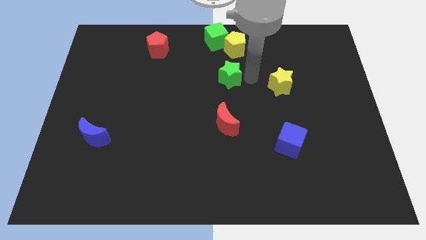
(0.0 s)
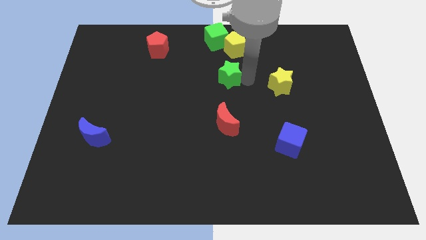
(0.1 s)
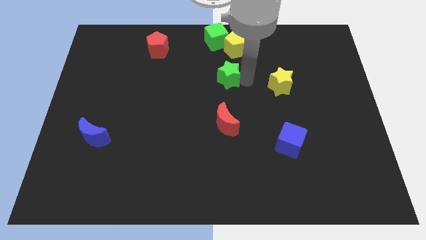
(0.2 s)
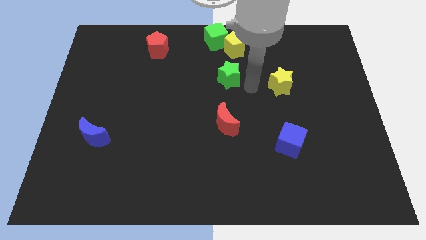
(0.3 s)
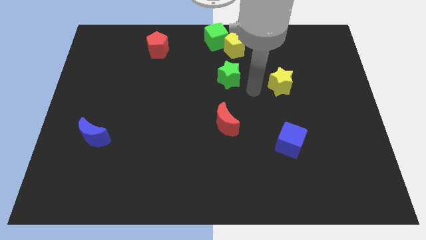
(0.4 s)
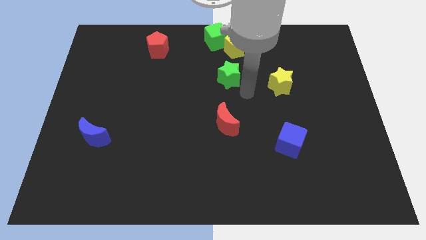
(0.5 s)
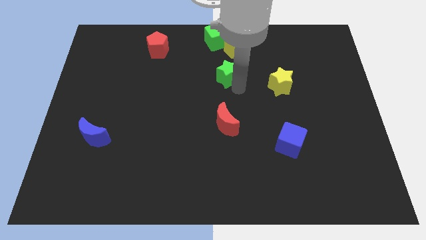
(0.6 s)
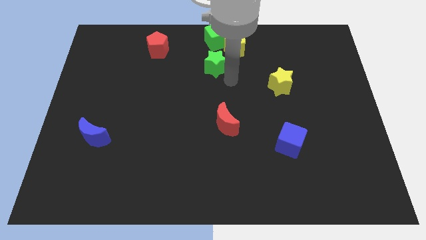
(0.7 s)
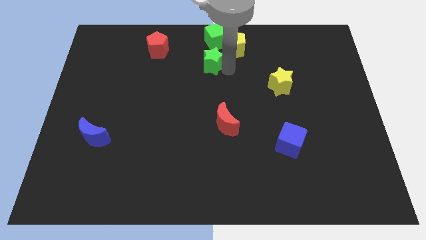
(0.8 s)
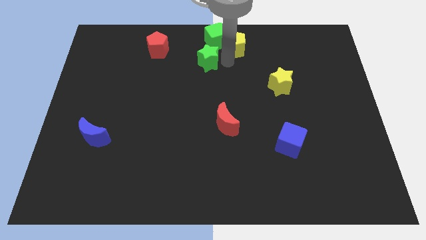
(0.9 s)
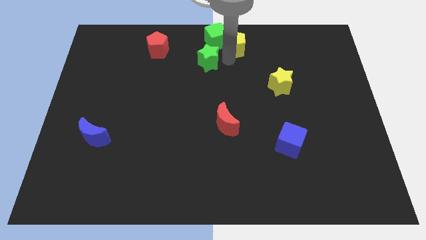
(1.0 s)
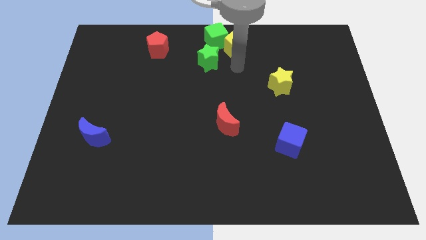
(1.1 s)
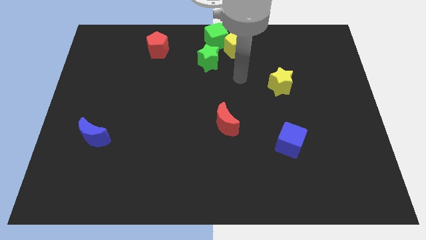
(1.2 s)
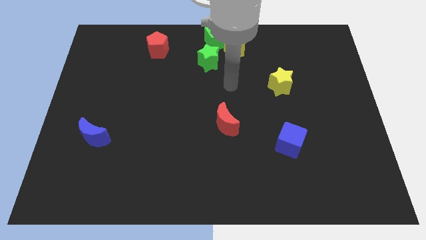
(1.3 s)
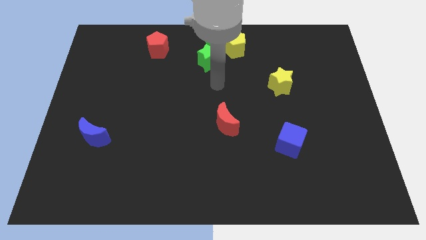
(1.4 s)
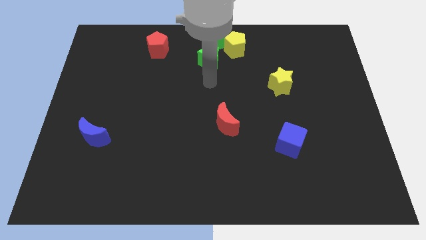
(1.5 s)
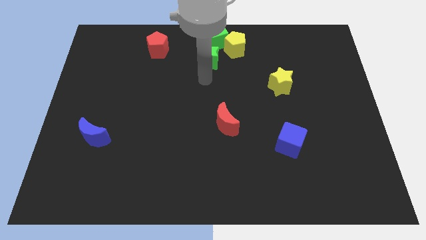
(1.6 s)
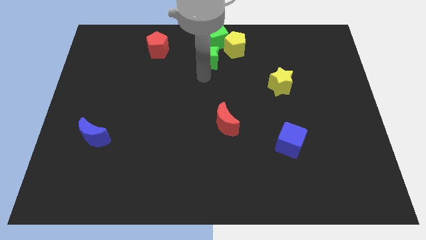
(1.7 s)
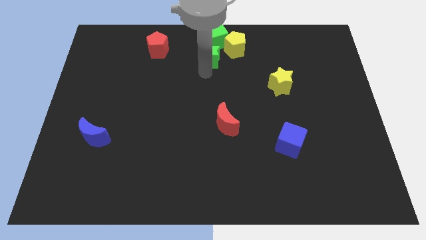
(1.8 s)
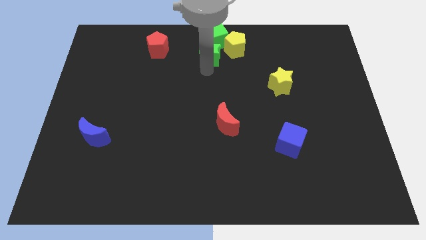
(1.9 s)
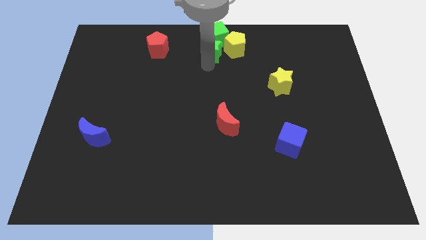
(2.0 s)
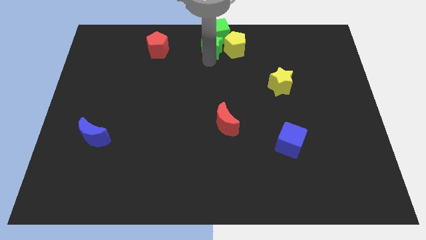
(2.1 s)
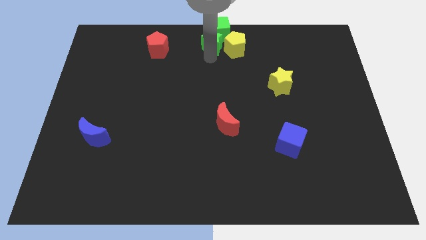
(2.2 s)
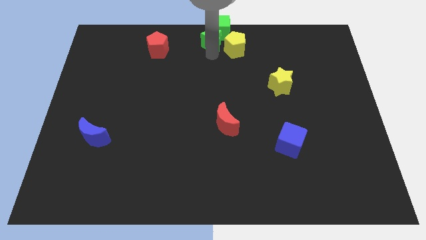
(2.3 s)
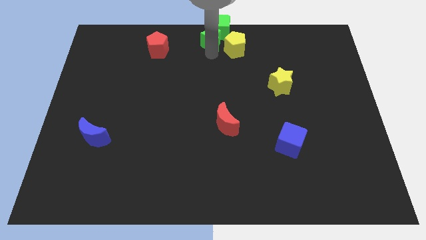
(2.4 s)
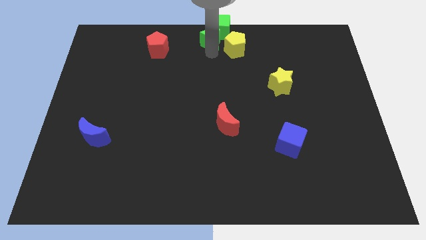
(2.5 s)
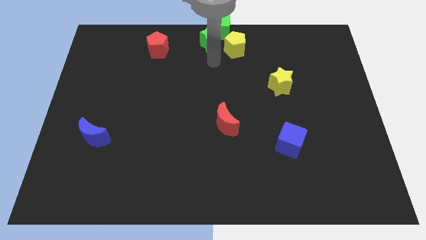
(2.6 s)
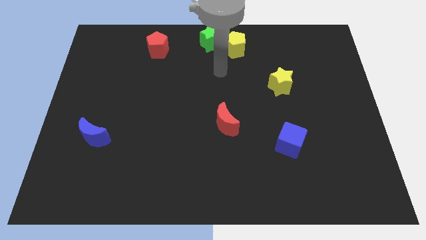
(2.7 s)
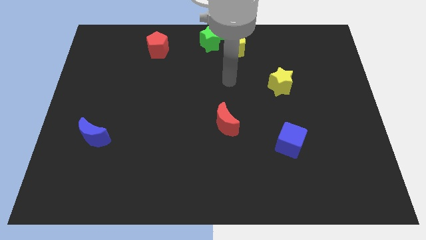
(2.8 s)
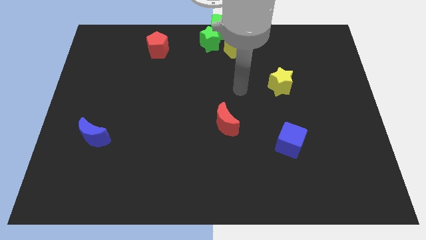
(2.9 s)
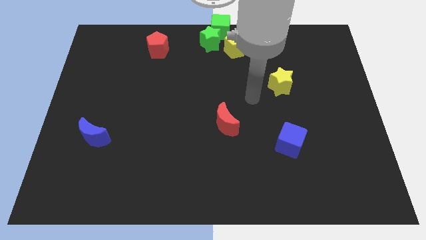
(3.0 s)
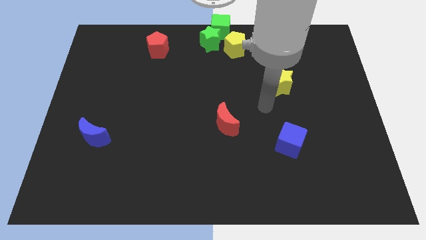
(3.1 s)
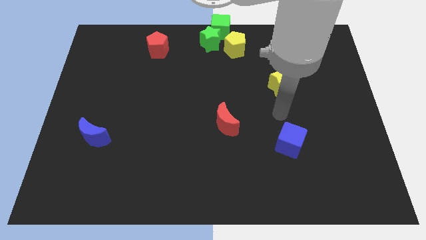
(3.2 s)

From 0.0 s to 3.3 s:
push the green star into the green cube from the bottom side

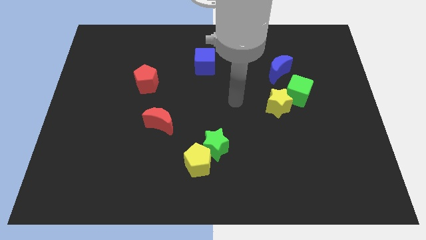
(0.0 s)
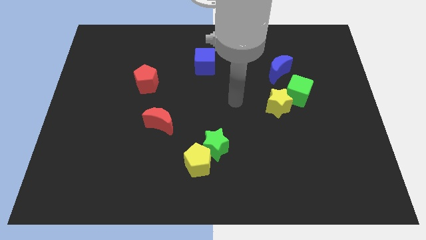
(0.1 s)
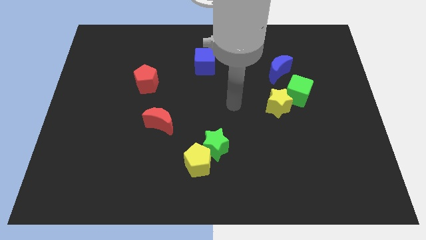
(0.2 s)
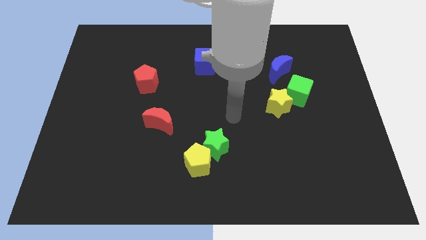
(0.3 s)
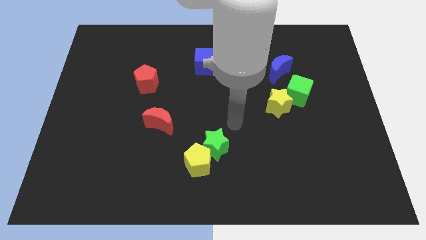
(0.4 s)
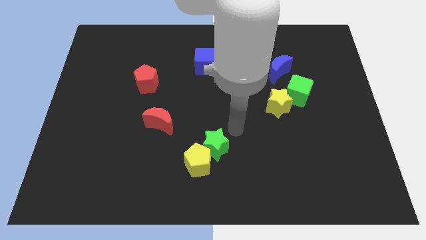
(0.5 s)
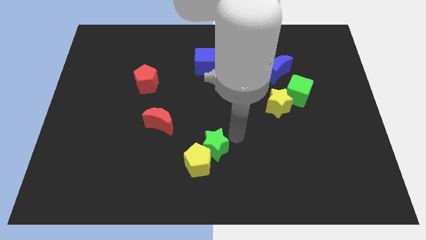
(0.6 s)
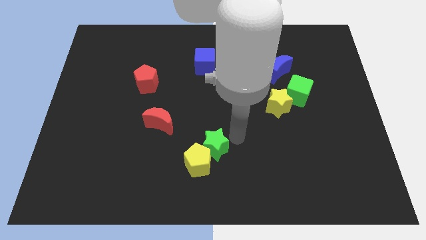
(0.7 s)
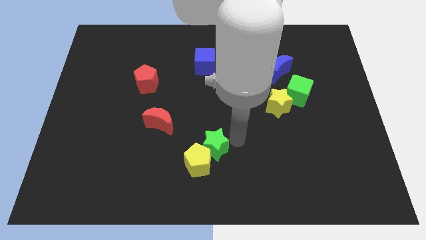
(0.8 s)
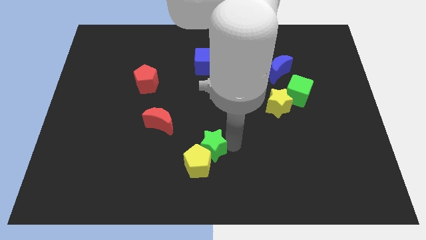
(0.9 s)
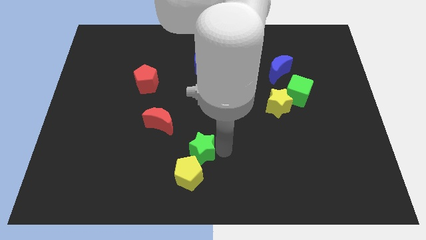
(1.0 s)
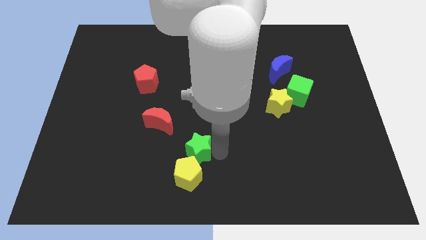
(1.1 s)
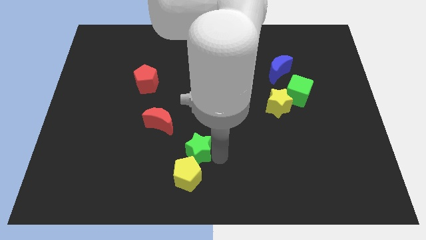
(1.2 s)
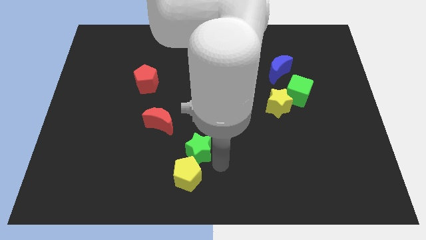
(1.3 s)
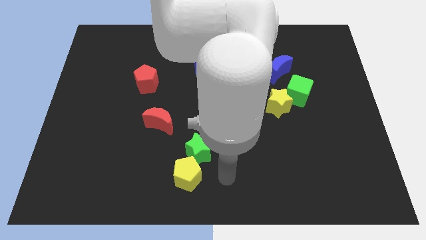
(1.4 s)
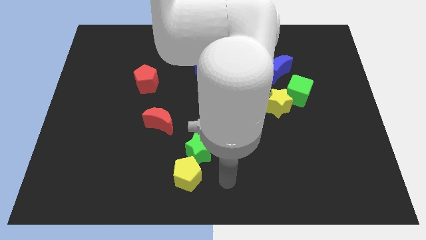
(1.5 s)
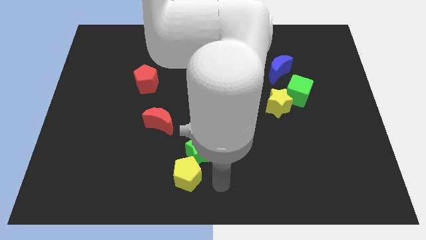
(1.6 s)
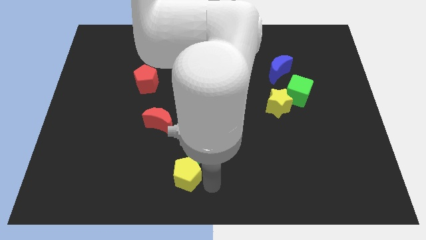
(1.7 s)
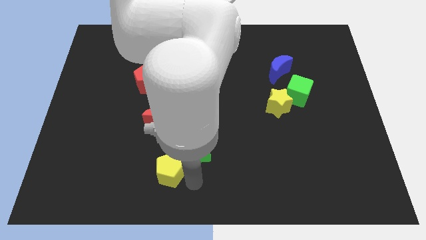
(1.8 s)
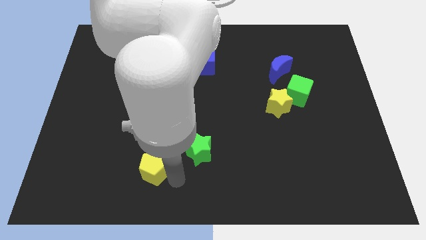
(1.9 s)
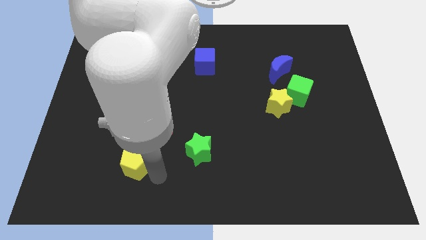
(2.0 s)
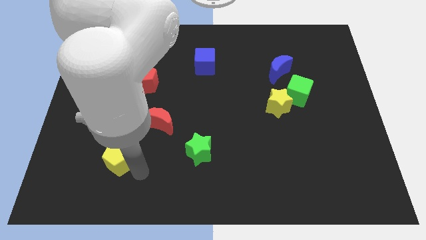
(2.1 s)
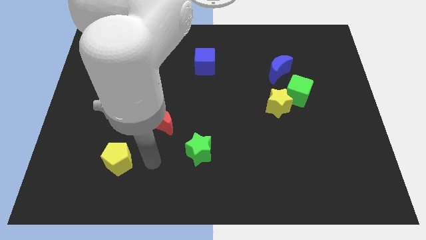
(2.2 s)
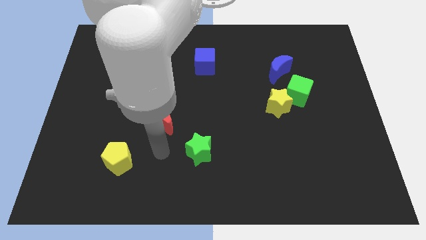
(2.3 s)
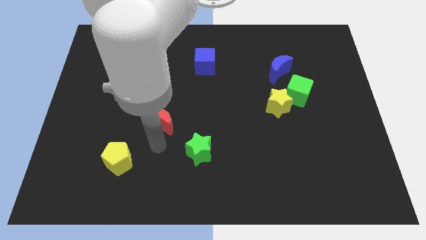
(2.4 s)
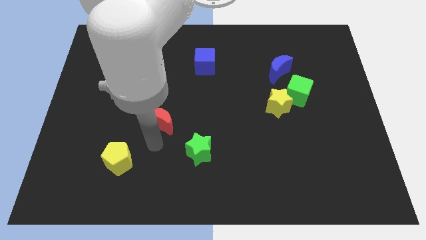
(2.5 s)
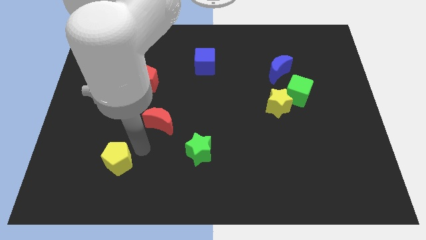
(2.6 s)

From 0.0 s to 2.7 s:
push the yellow pentagon towards the bottom right side of the board

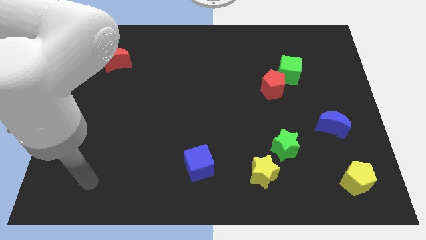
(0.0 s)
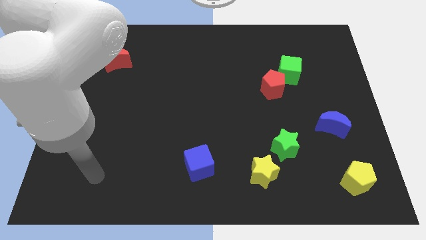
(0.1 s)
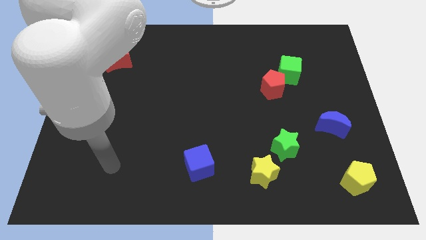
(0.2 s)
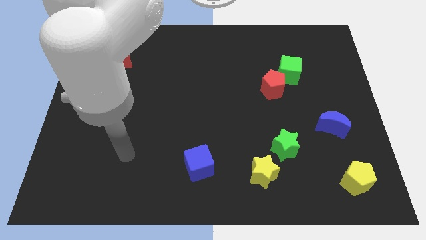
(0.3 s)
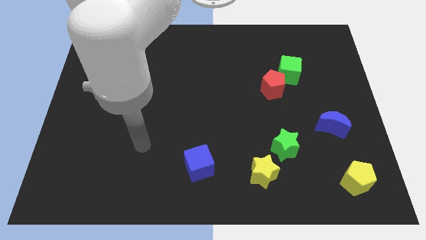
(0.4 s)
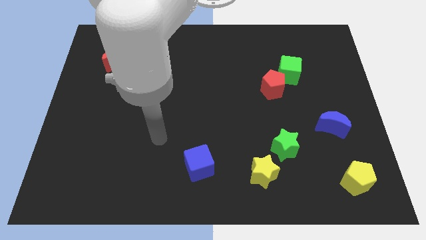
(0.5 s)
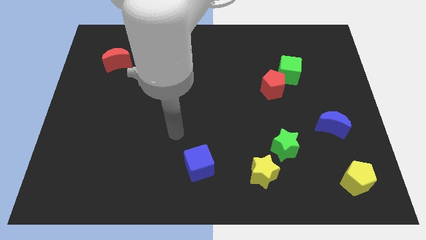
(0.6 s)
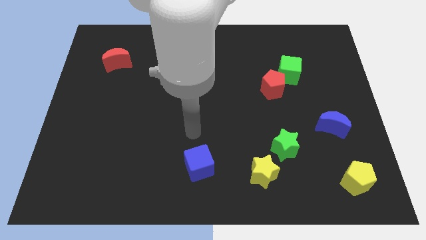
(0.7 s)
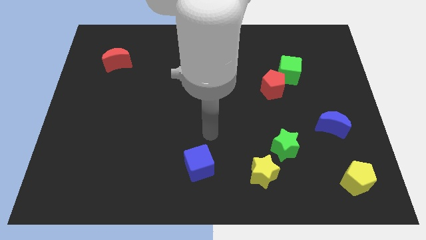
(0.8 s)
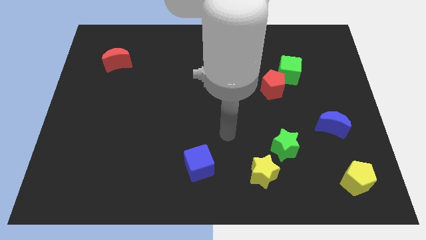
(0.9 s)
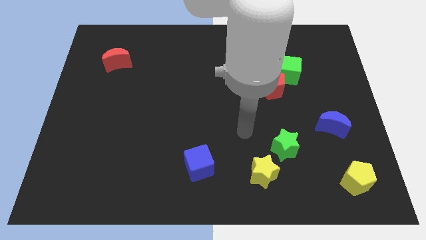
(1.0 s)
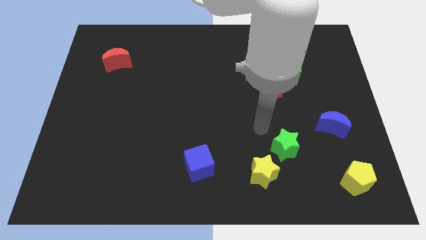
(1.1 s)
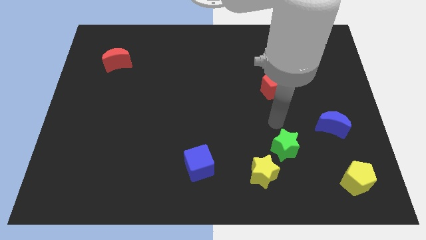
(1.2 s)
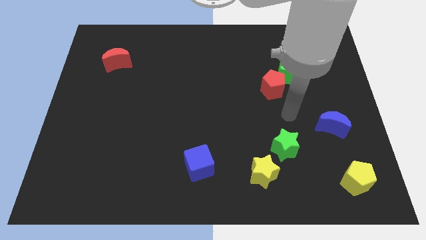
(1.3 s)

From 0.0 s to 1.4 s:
place your hand above the green star

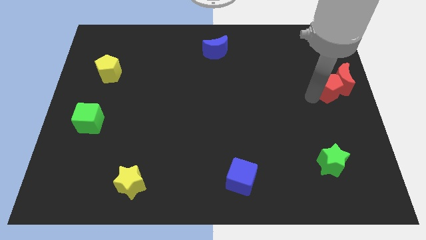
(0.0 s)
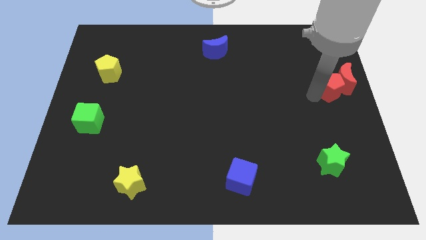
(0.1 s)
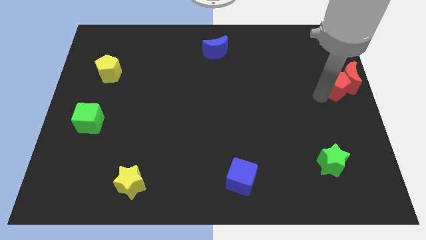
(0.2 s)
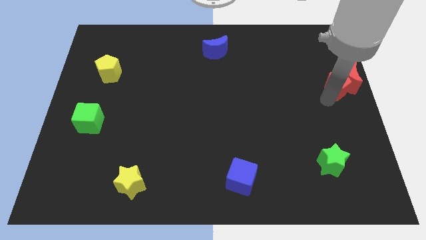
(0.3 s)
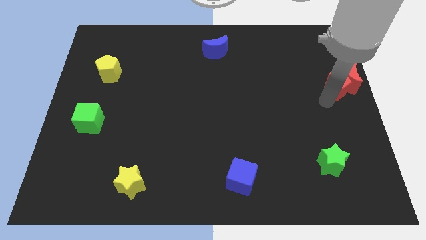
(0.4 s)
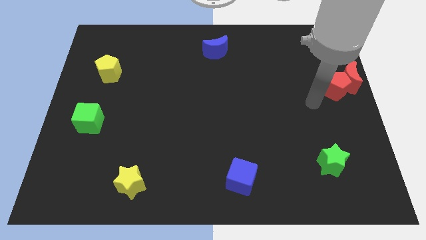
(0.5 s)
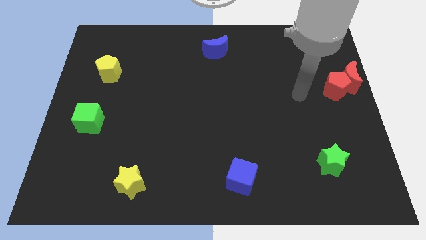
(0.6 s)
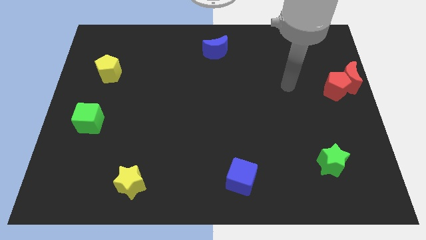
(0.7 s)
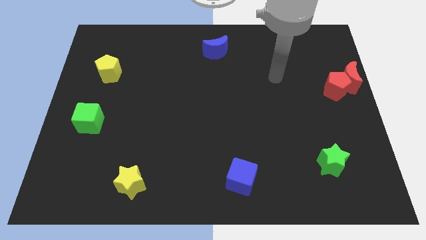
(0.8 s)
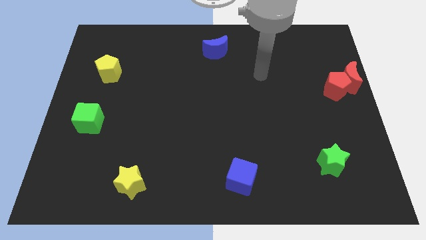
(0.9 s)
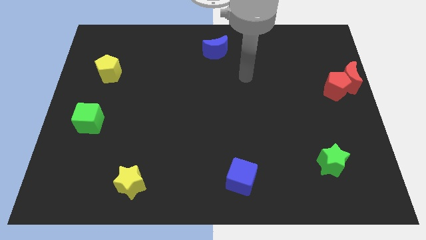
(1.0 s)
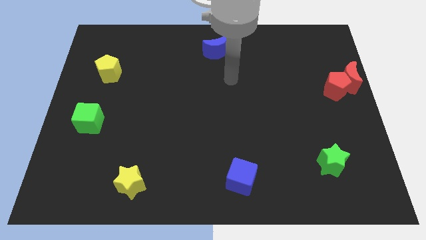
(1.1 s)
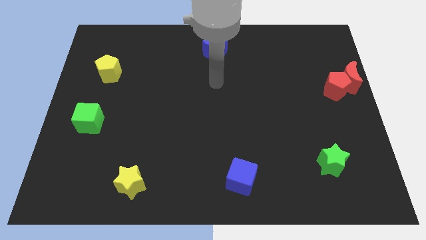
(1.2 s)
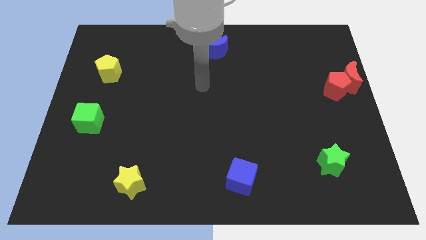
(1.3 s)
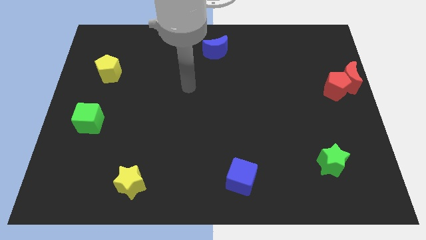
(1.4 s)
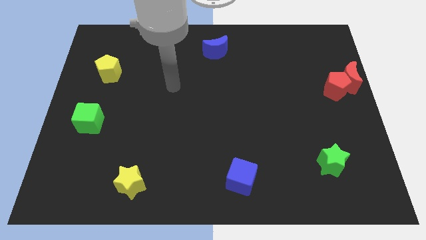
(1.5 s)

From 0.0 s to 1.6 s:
push the red pentagon into the red crescent from the left

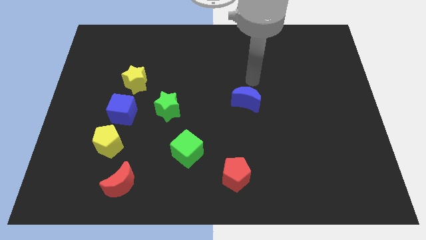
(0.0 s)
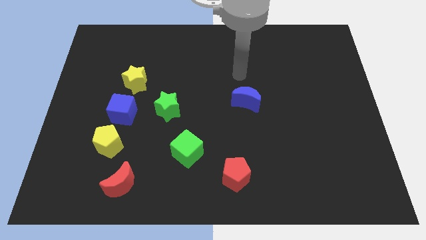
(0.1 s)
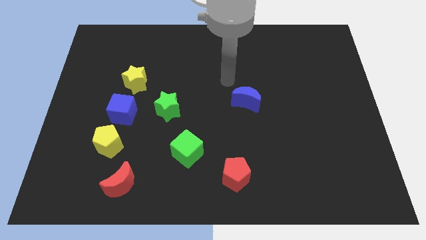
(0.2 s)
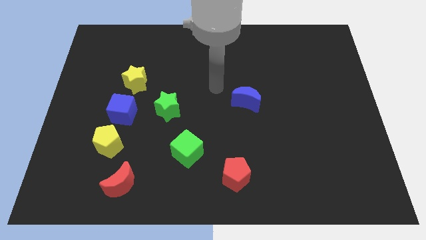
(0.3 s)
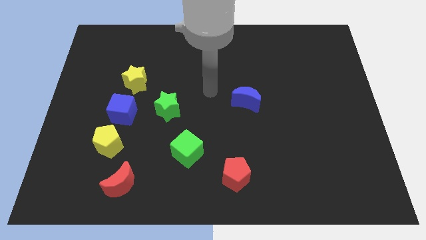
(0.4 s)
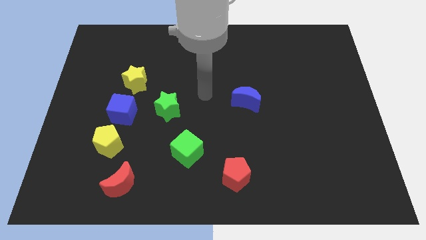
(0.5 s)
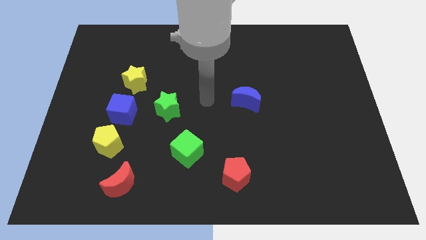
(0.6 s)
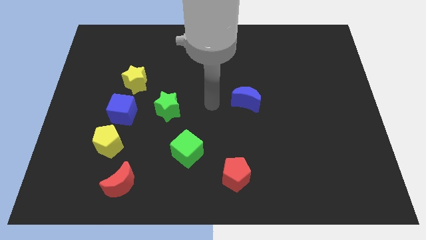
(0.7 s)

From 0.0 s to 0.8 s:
place your arm in between green star and blue moon
